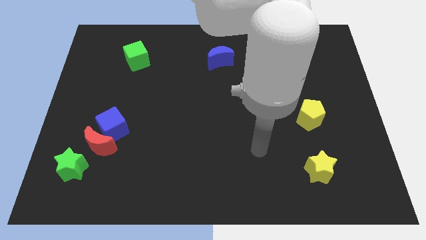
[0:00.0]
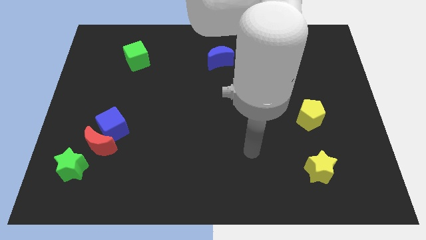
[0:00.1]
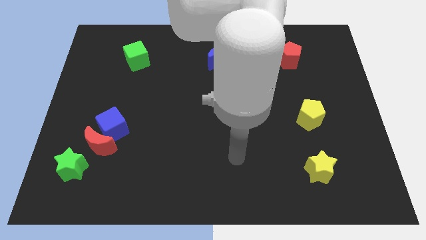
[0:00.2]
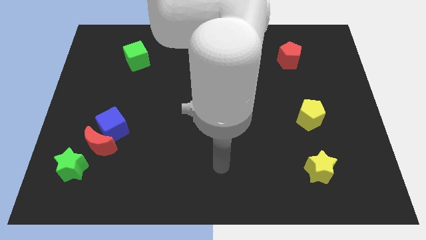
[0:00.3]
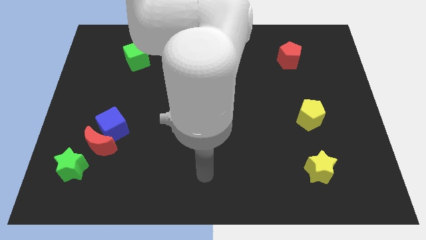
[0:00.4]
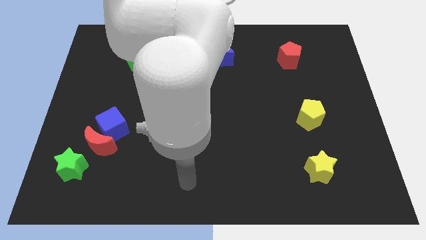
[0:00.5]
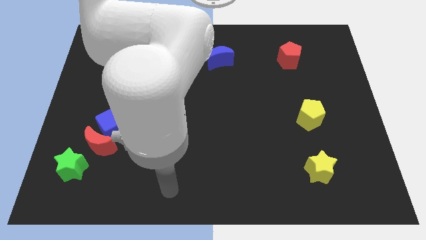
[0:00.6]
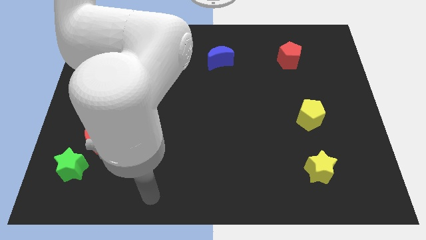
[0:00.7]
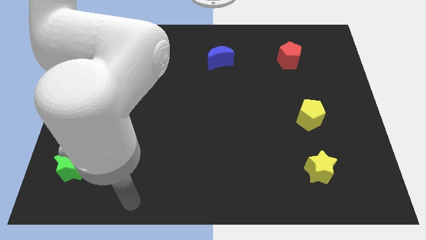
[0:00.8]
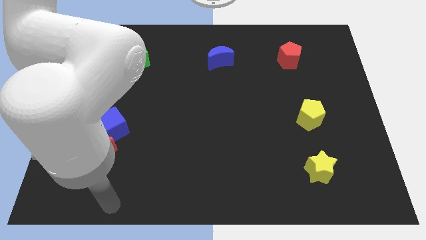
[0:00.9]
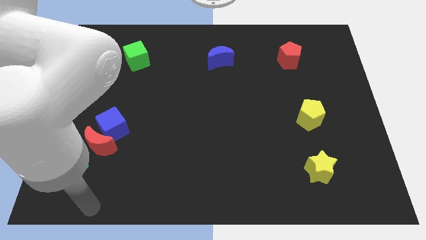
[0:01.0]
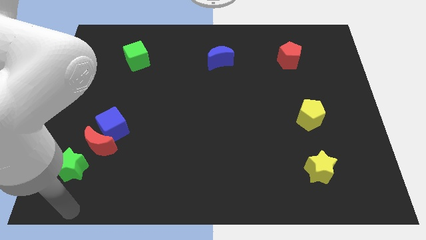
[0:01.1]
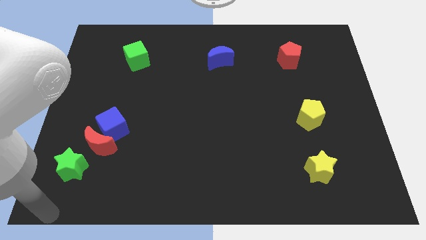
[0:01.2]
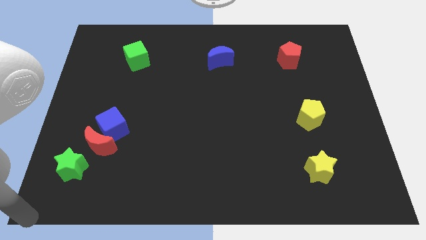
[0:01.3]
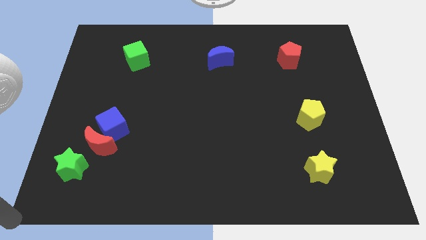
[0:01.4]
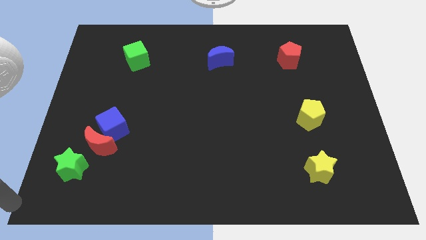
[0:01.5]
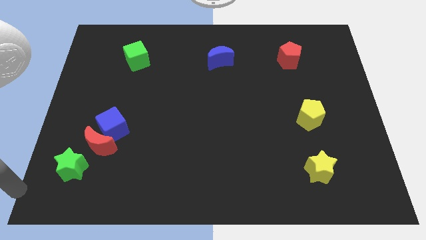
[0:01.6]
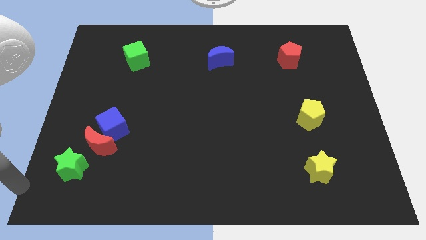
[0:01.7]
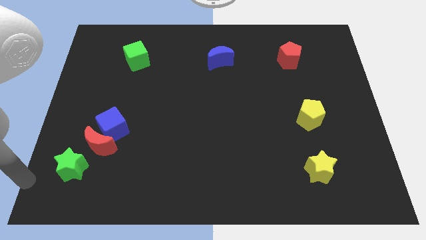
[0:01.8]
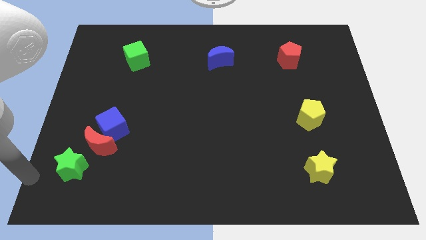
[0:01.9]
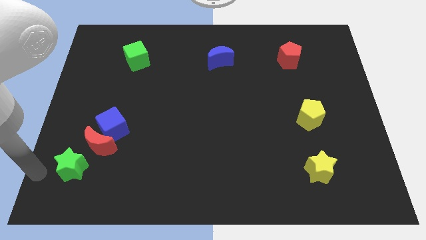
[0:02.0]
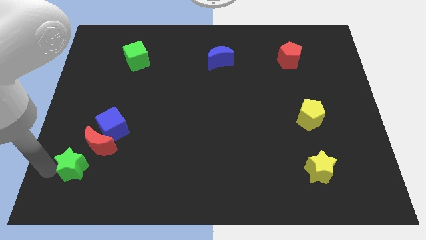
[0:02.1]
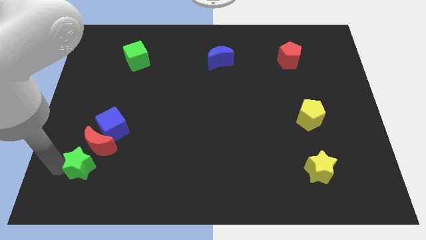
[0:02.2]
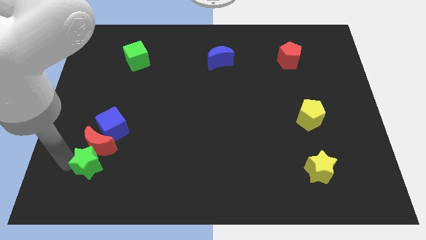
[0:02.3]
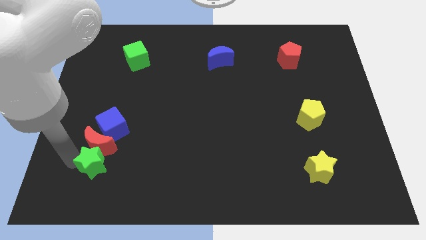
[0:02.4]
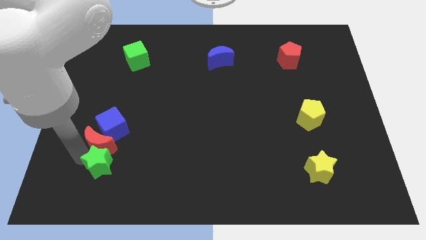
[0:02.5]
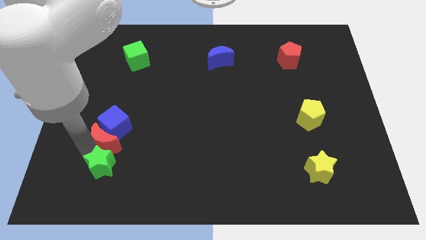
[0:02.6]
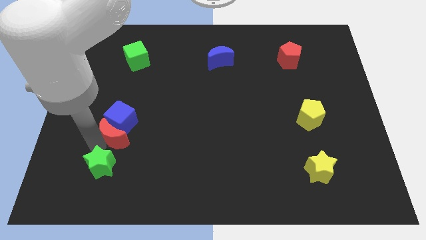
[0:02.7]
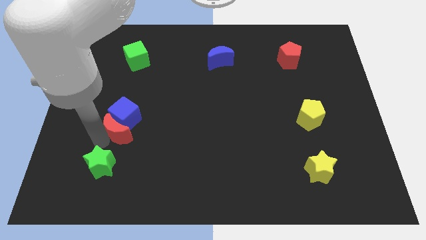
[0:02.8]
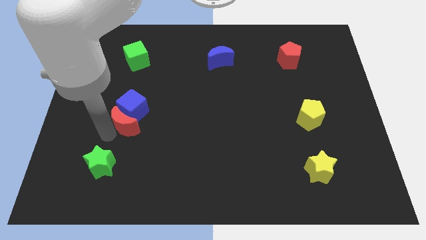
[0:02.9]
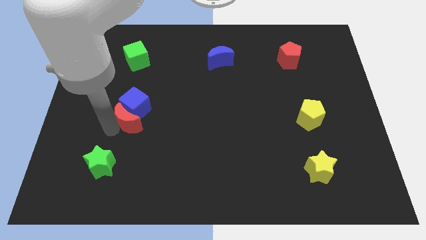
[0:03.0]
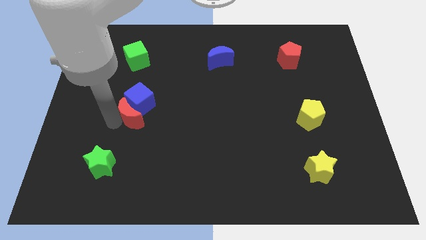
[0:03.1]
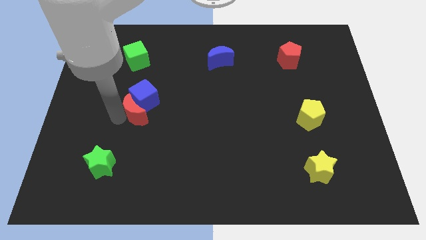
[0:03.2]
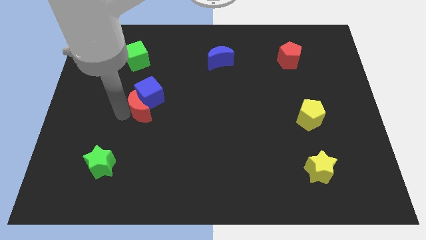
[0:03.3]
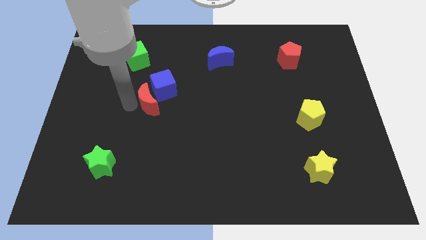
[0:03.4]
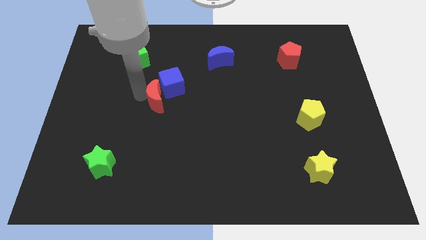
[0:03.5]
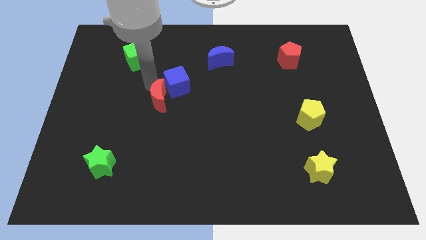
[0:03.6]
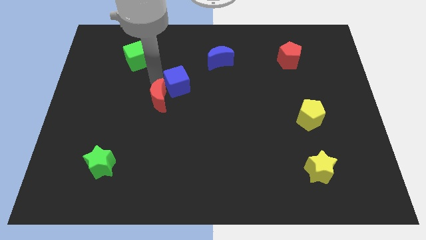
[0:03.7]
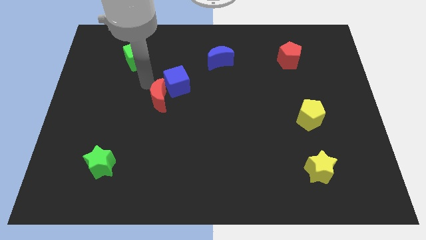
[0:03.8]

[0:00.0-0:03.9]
push the blue cube and red moon towards the left side of the blue moon

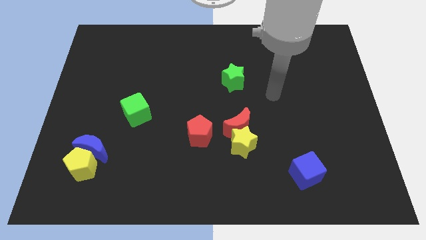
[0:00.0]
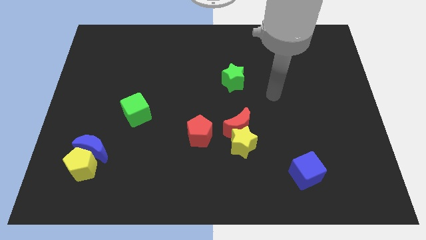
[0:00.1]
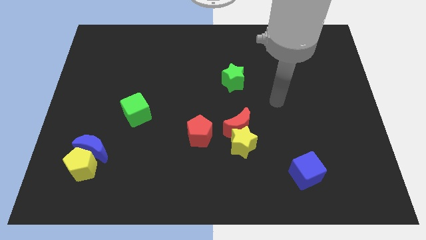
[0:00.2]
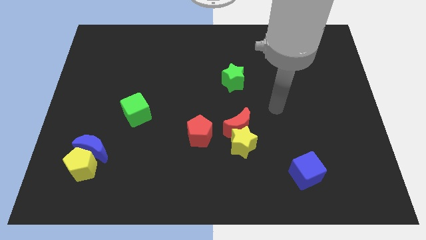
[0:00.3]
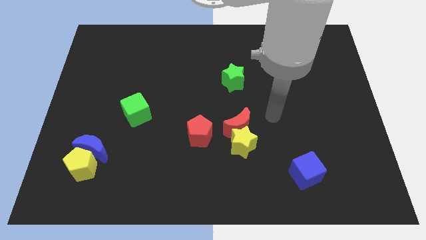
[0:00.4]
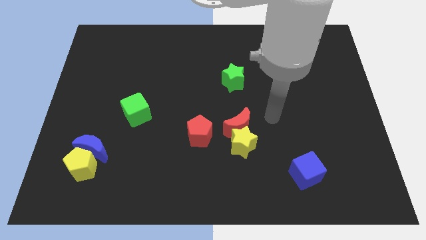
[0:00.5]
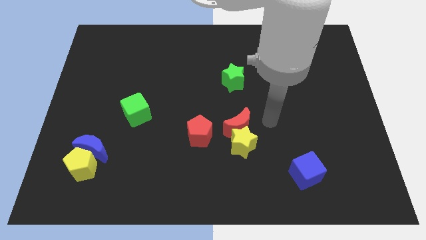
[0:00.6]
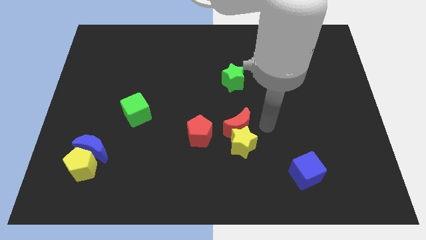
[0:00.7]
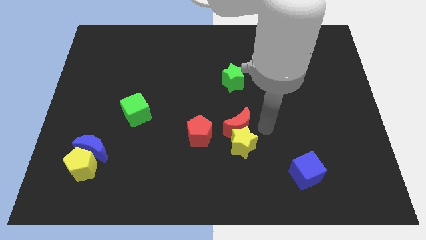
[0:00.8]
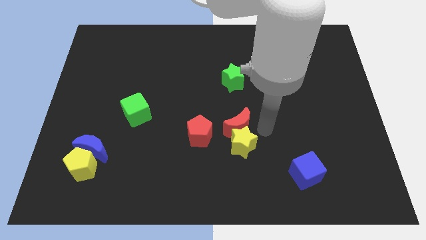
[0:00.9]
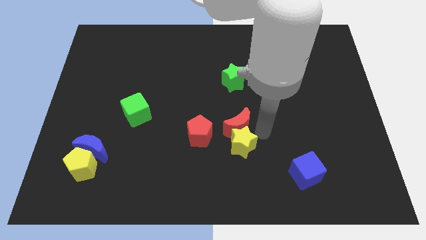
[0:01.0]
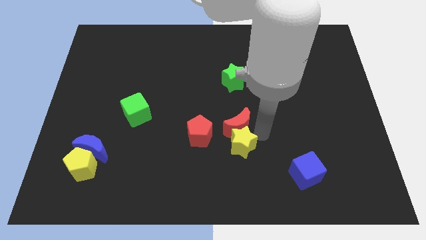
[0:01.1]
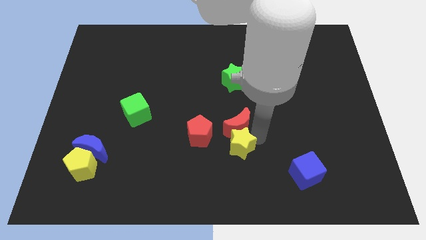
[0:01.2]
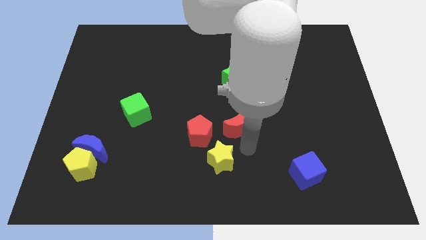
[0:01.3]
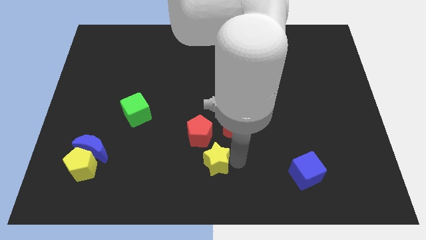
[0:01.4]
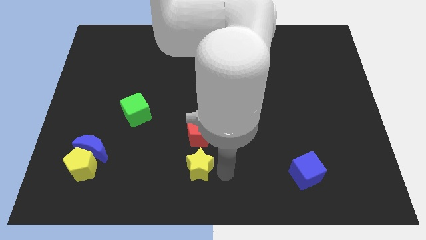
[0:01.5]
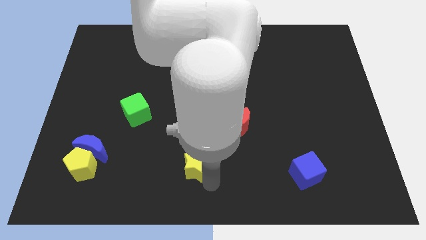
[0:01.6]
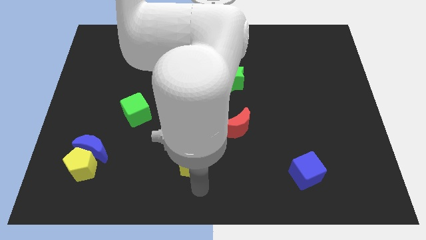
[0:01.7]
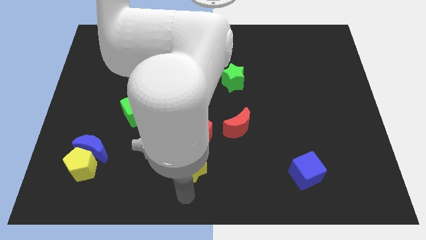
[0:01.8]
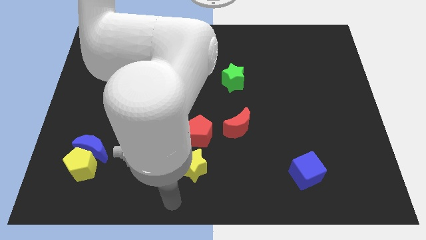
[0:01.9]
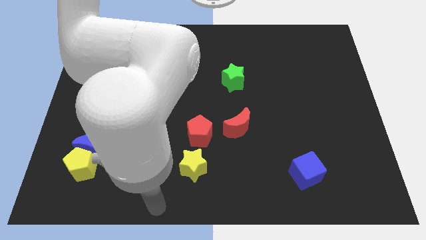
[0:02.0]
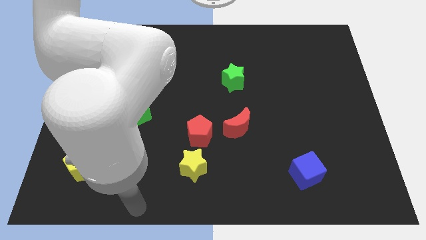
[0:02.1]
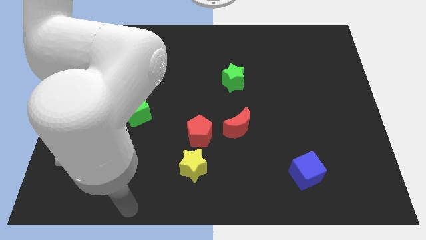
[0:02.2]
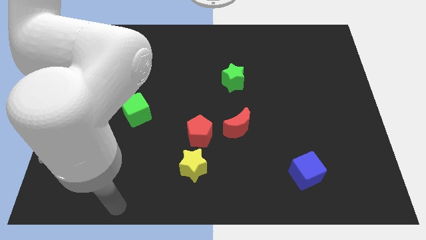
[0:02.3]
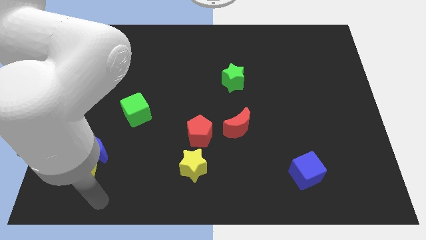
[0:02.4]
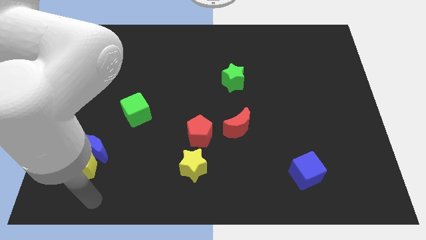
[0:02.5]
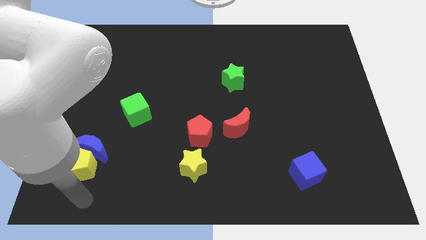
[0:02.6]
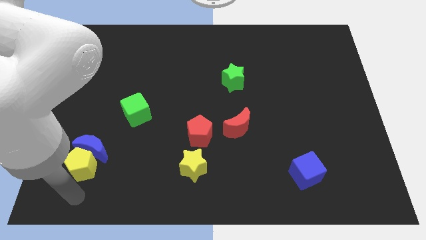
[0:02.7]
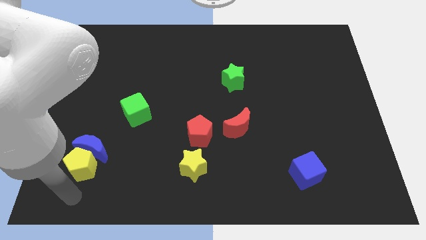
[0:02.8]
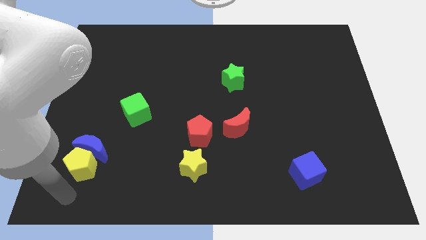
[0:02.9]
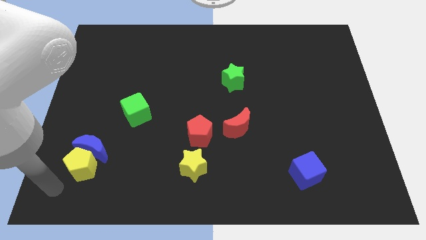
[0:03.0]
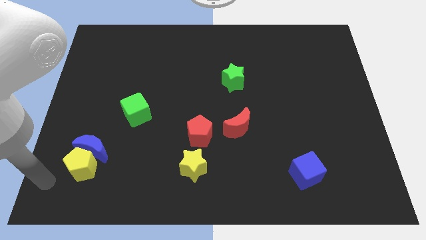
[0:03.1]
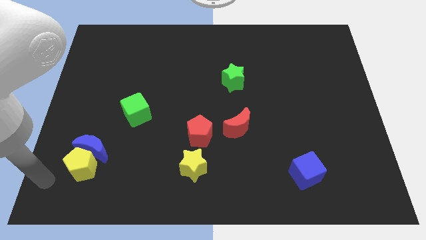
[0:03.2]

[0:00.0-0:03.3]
place the yellow star at the bottom side of the red pentagon

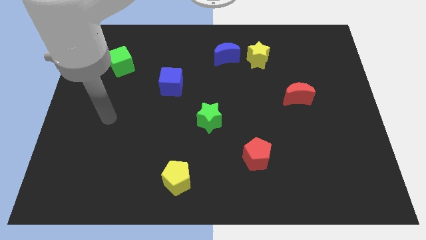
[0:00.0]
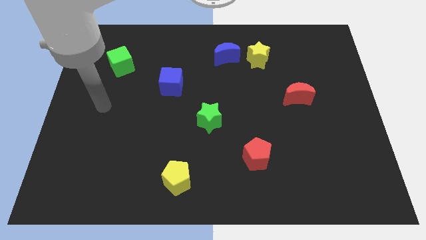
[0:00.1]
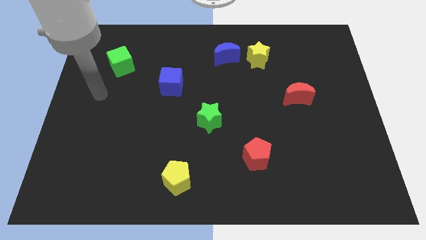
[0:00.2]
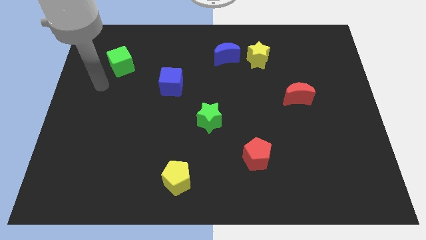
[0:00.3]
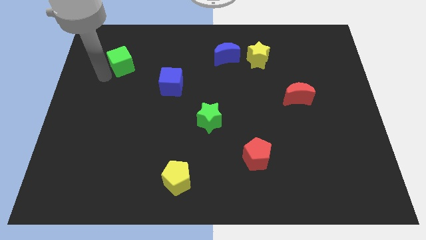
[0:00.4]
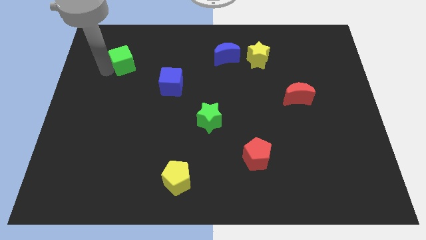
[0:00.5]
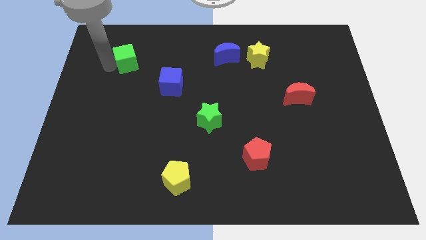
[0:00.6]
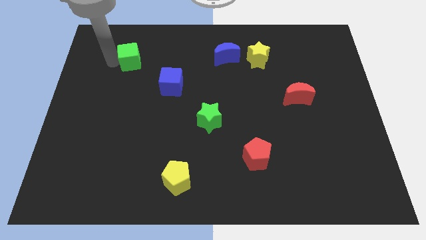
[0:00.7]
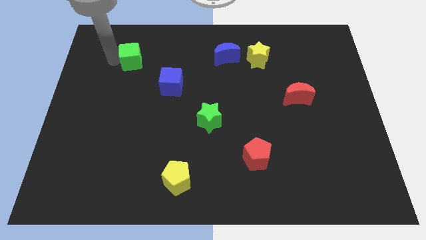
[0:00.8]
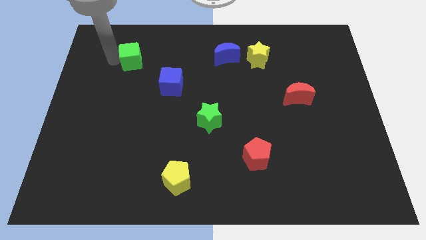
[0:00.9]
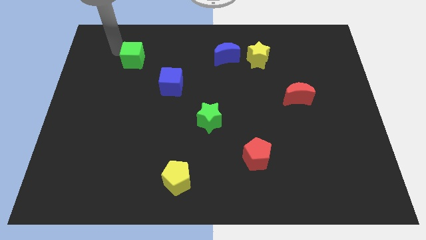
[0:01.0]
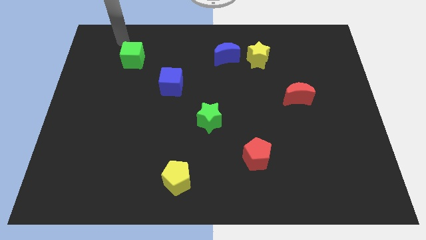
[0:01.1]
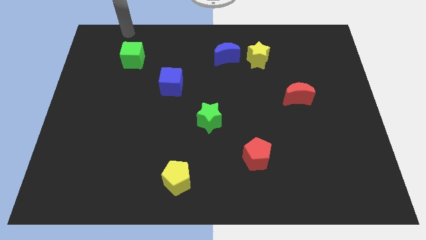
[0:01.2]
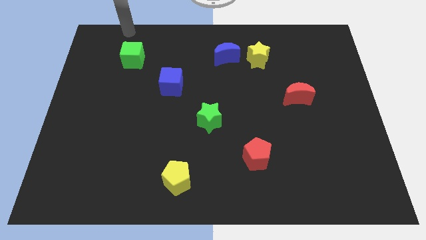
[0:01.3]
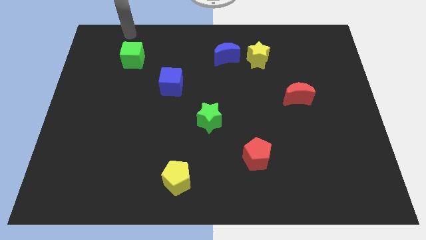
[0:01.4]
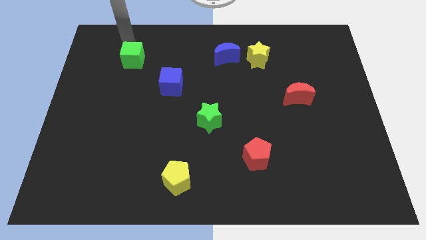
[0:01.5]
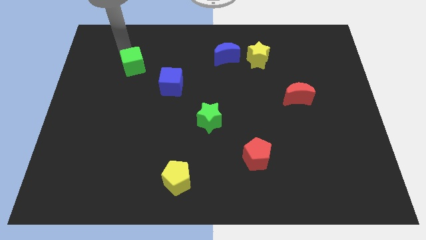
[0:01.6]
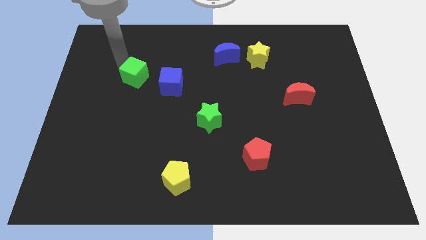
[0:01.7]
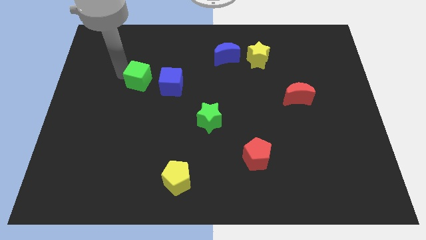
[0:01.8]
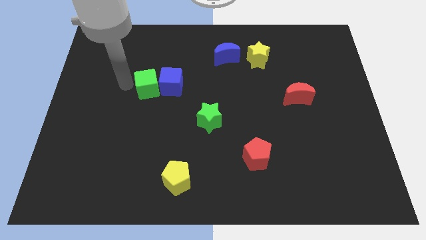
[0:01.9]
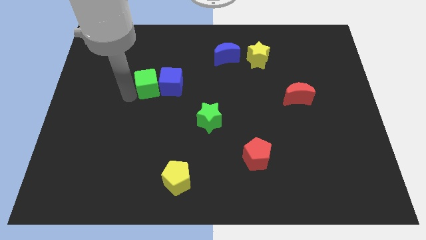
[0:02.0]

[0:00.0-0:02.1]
push the green cube to the left of the blue cube
